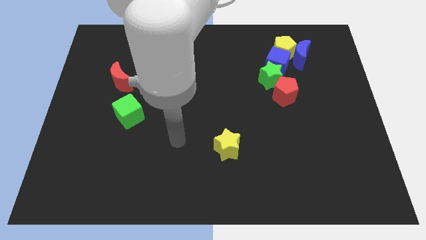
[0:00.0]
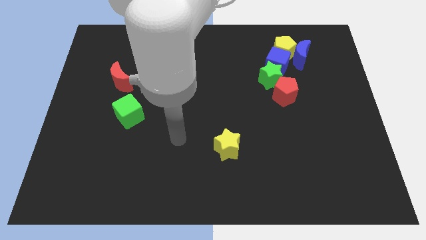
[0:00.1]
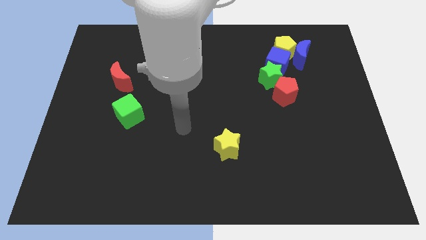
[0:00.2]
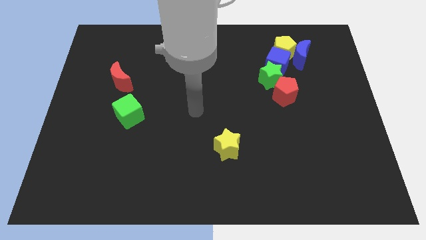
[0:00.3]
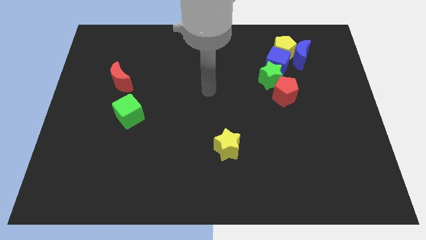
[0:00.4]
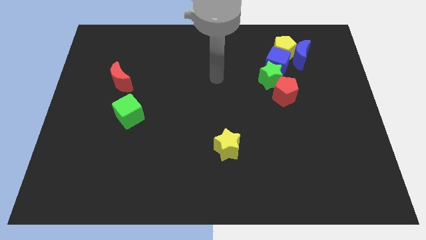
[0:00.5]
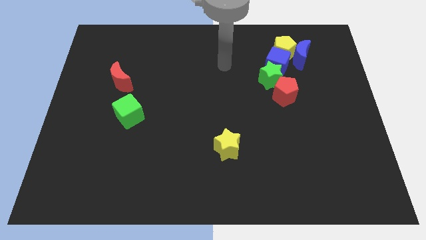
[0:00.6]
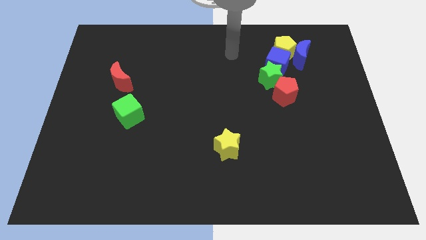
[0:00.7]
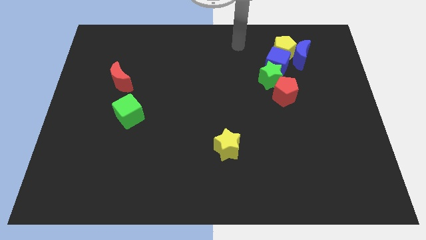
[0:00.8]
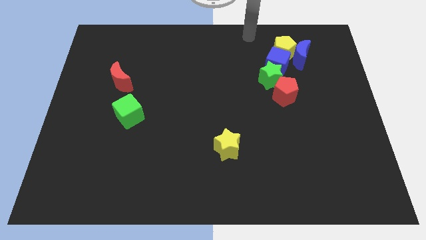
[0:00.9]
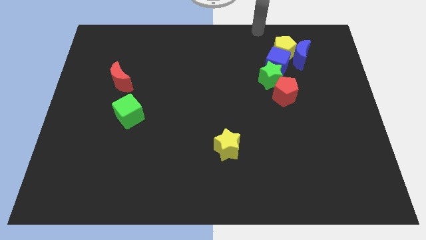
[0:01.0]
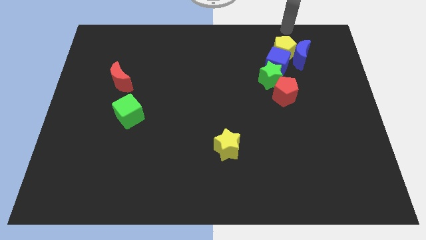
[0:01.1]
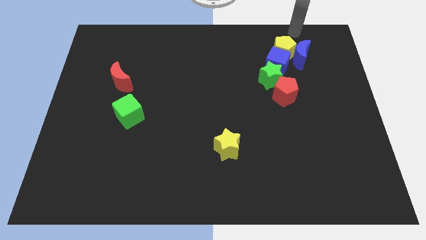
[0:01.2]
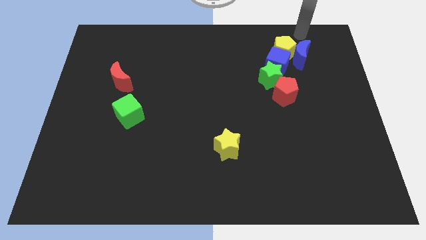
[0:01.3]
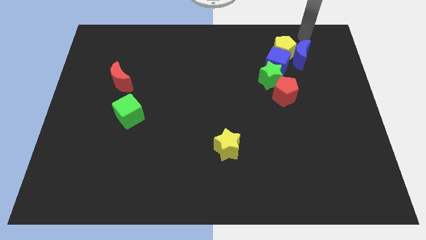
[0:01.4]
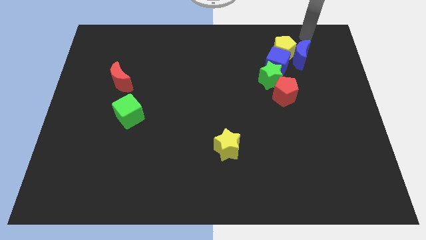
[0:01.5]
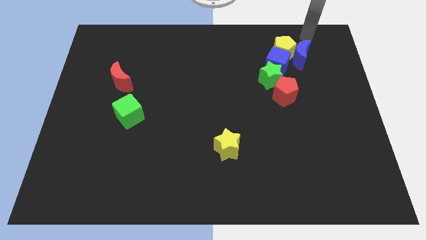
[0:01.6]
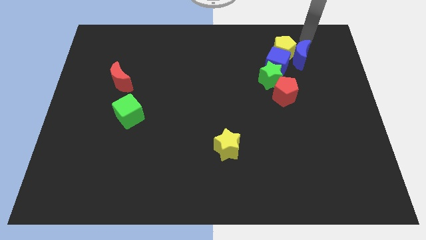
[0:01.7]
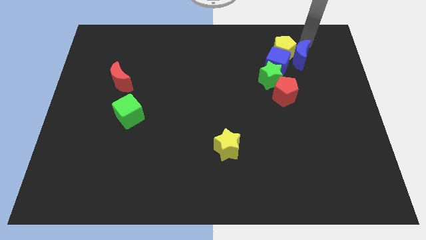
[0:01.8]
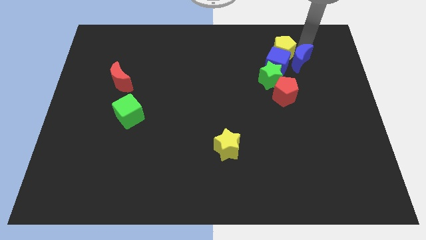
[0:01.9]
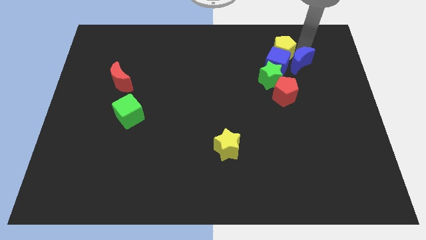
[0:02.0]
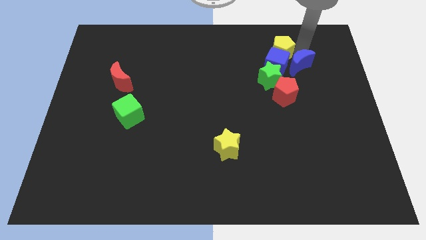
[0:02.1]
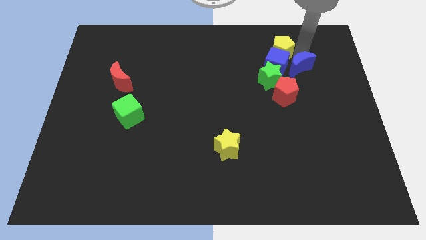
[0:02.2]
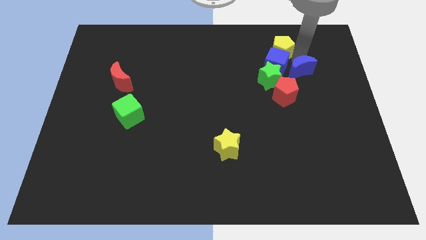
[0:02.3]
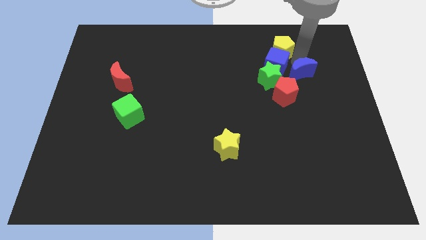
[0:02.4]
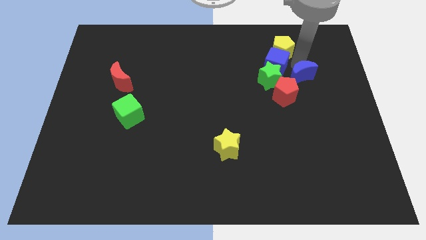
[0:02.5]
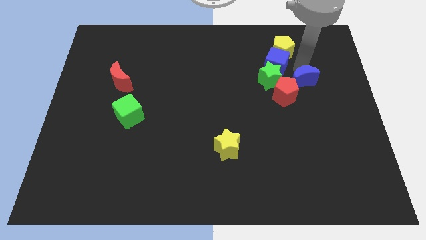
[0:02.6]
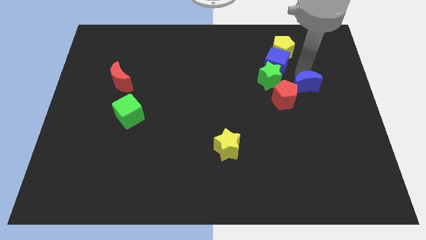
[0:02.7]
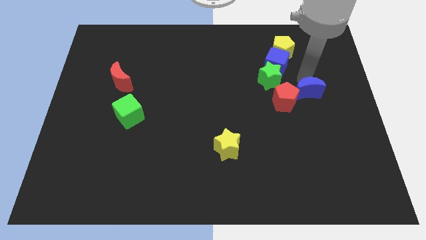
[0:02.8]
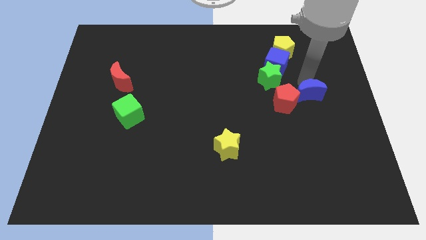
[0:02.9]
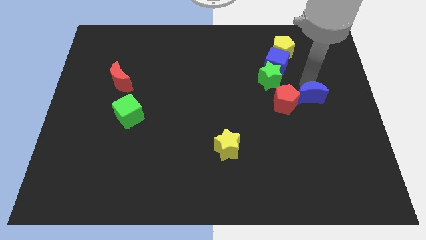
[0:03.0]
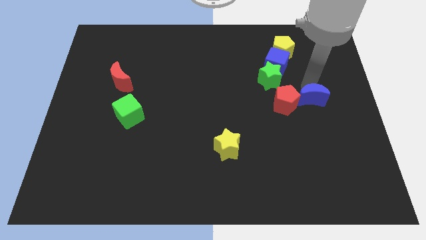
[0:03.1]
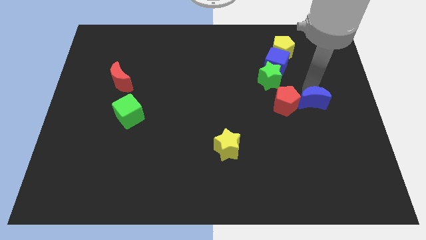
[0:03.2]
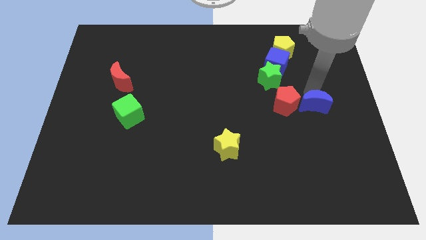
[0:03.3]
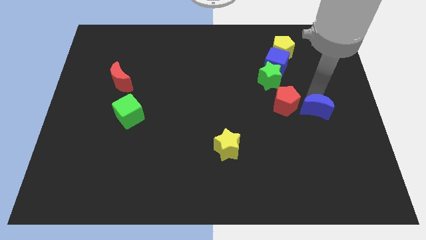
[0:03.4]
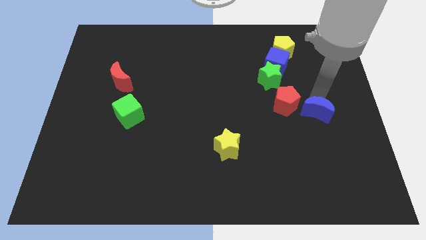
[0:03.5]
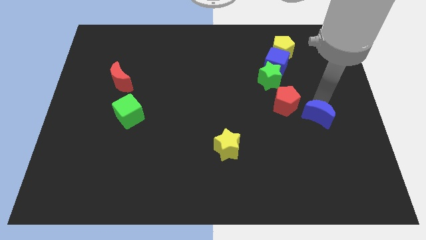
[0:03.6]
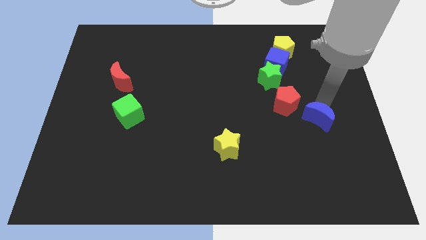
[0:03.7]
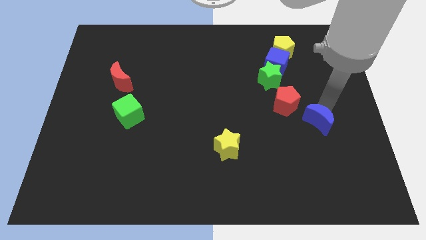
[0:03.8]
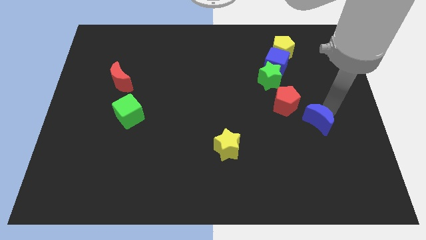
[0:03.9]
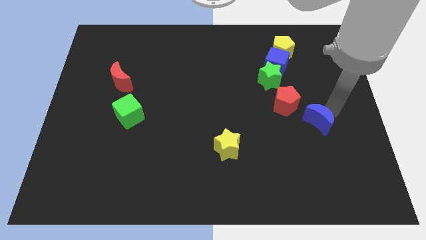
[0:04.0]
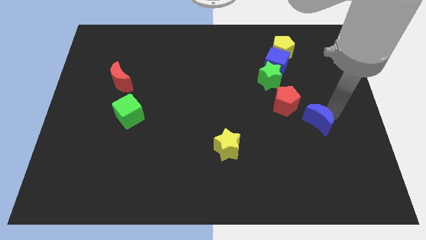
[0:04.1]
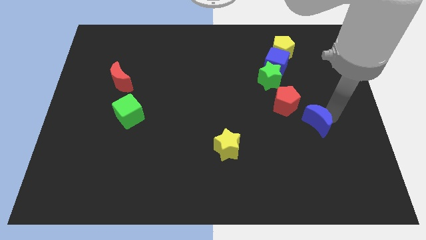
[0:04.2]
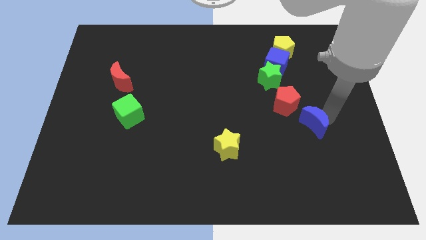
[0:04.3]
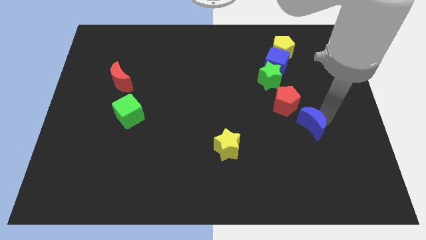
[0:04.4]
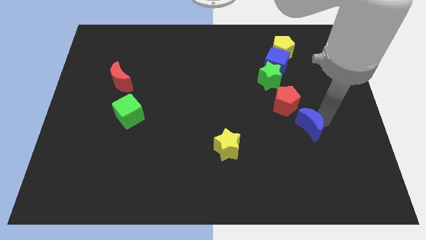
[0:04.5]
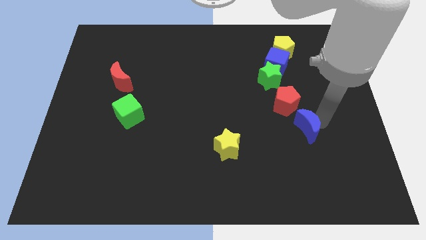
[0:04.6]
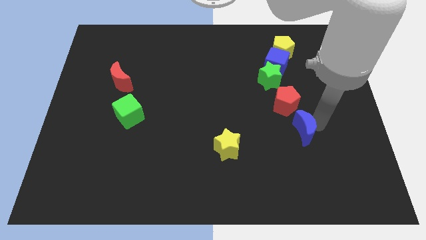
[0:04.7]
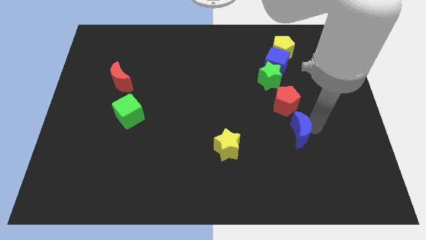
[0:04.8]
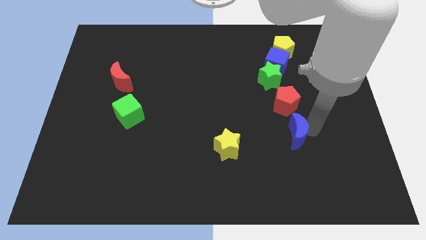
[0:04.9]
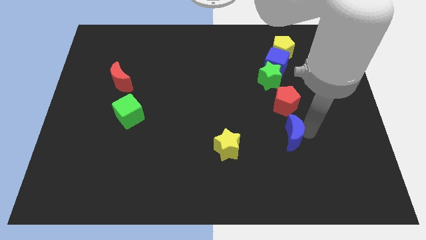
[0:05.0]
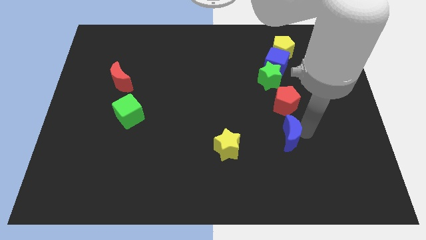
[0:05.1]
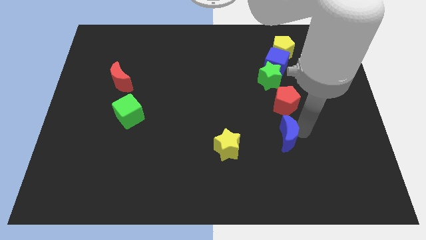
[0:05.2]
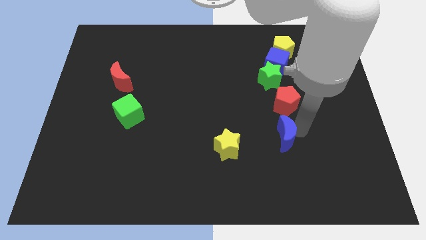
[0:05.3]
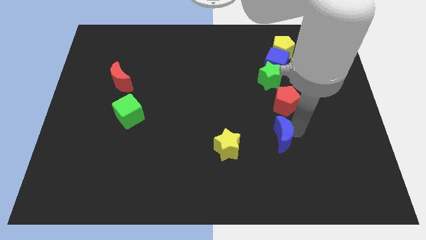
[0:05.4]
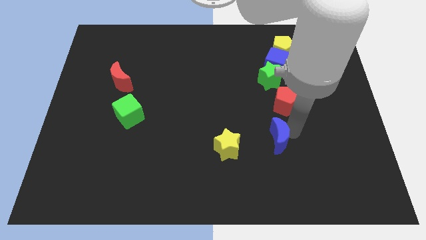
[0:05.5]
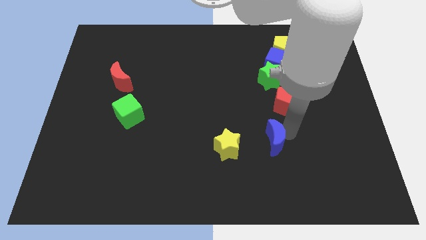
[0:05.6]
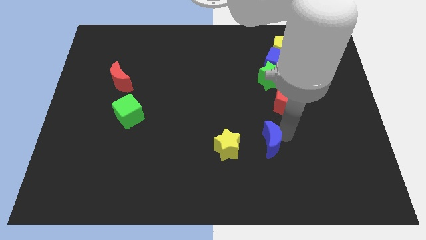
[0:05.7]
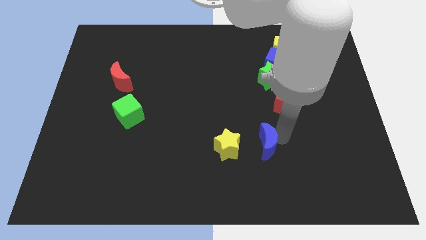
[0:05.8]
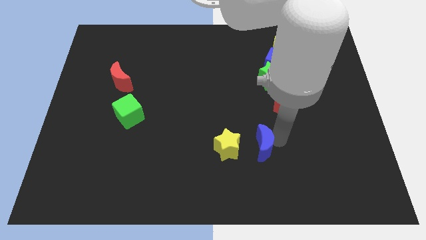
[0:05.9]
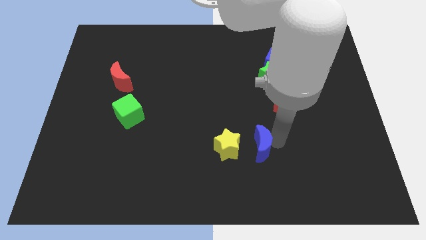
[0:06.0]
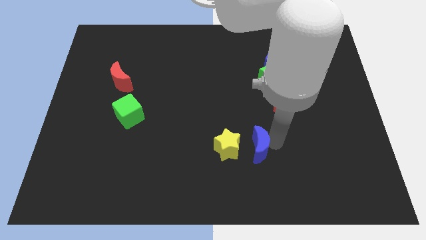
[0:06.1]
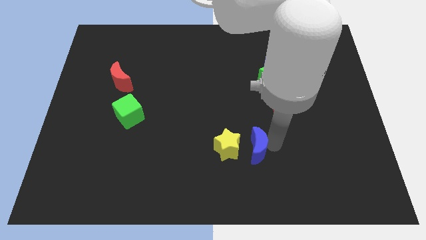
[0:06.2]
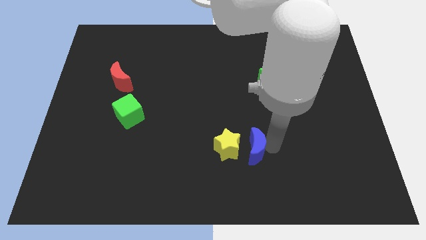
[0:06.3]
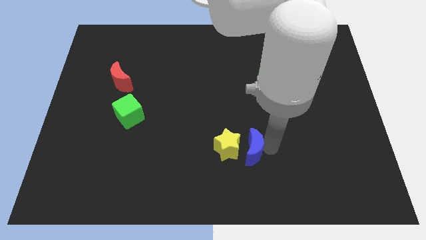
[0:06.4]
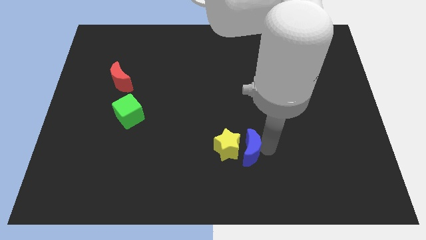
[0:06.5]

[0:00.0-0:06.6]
push the blue moon to the yellow star

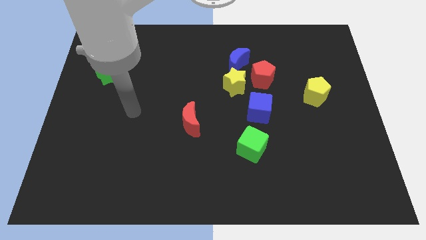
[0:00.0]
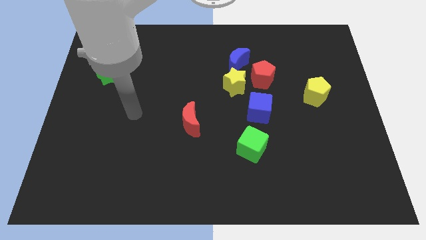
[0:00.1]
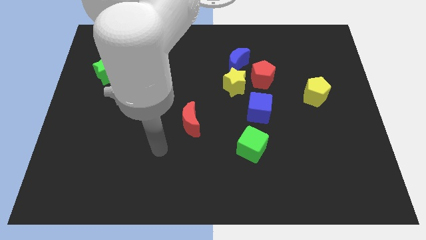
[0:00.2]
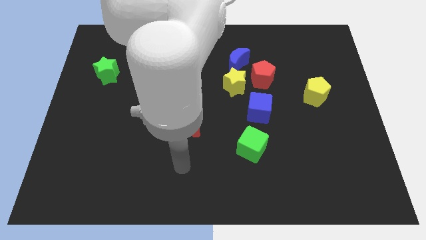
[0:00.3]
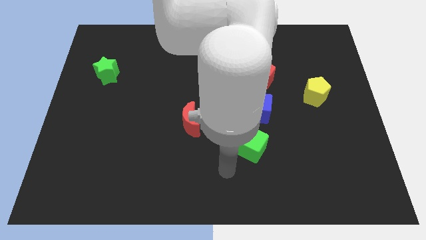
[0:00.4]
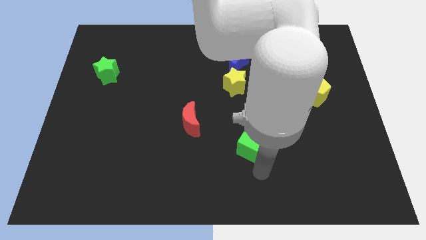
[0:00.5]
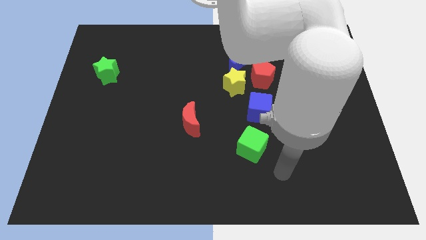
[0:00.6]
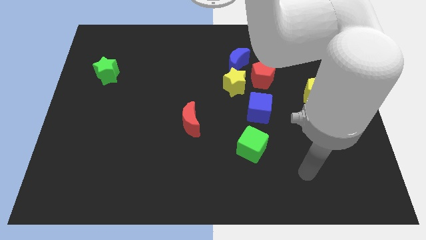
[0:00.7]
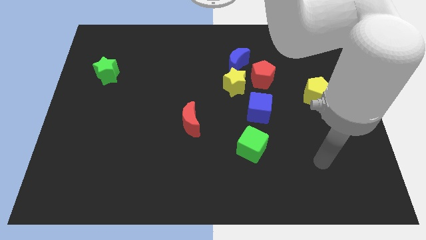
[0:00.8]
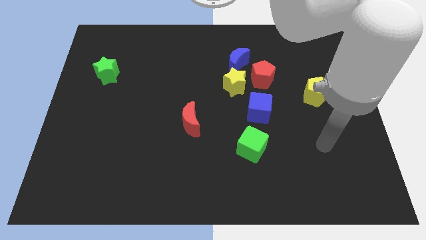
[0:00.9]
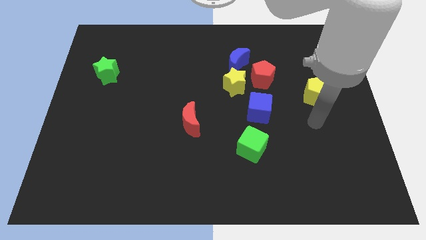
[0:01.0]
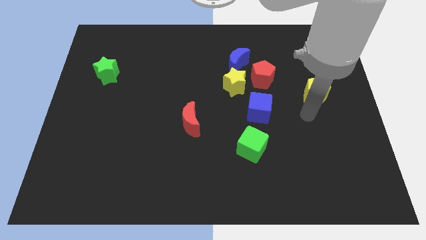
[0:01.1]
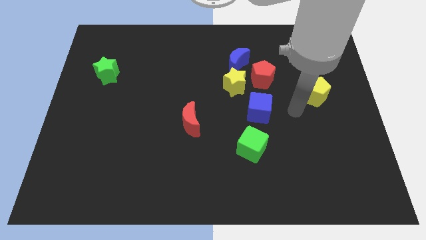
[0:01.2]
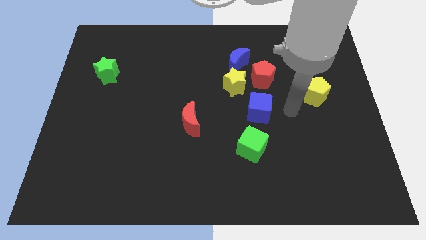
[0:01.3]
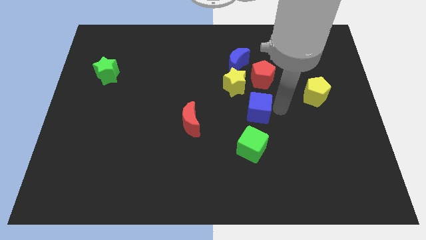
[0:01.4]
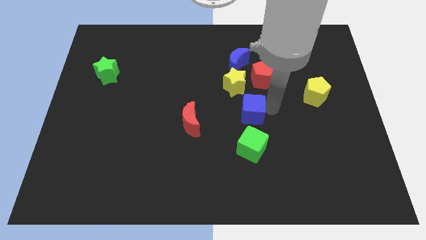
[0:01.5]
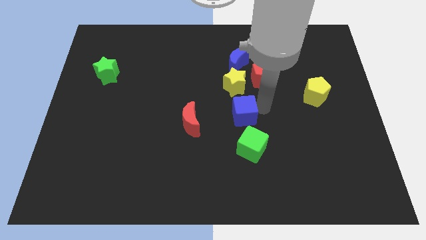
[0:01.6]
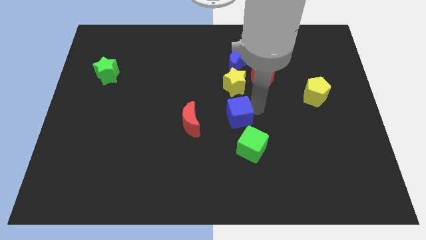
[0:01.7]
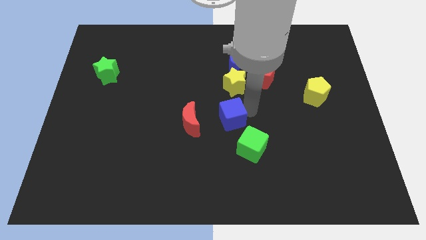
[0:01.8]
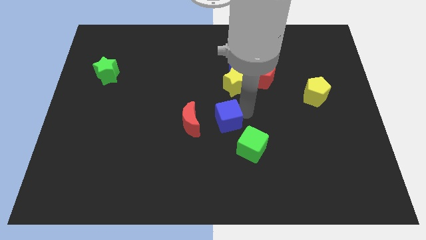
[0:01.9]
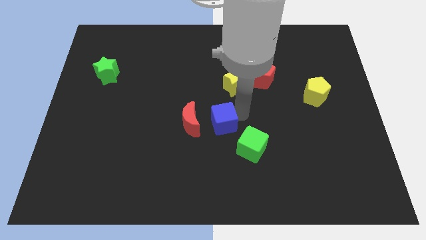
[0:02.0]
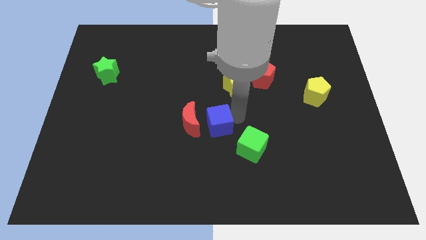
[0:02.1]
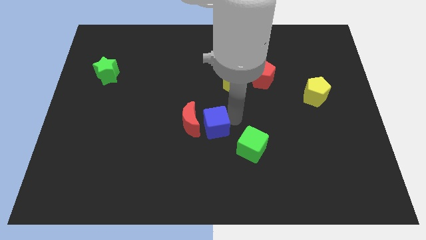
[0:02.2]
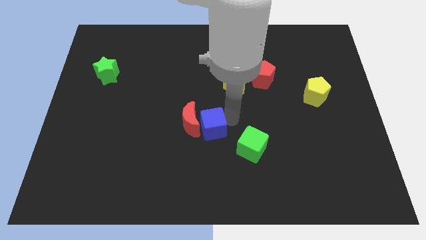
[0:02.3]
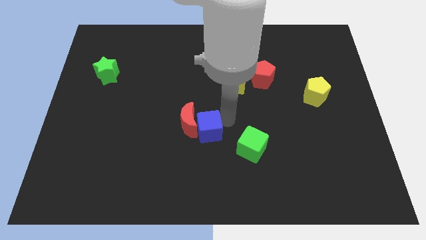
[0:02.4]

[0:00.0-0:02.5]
put the blue cube towards the red moon
